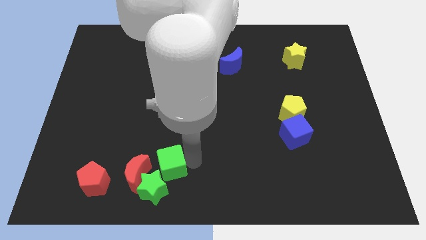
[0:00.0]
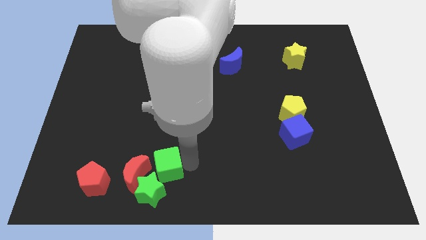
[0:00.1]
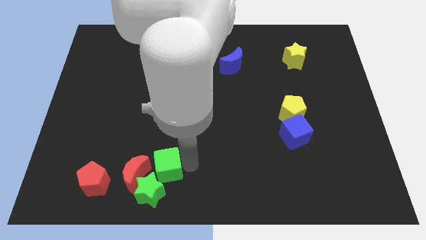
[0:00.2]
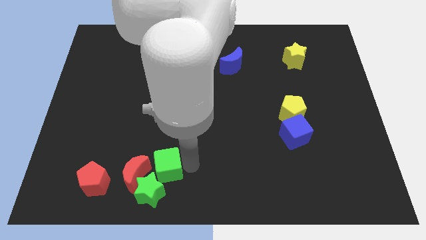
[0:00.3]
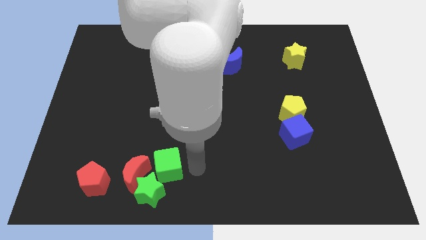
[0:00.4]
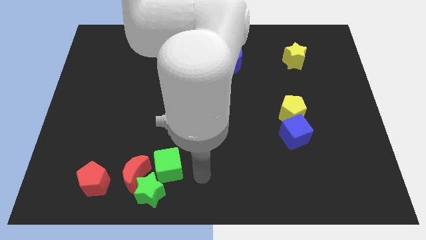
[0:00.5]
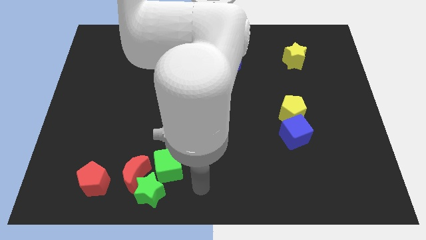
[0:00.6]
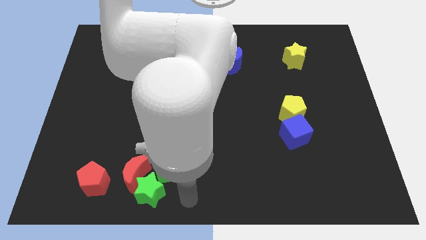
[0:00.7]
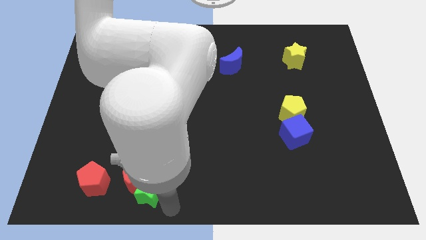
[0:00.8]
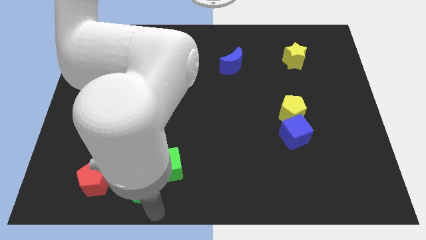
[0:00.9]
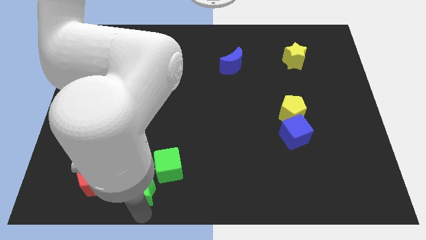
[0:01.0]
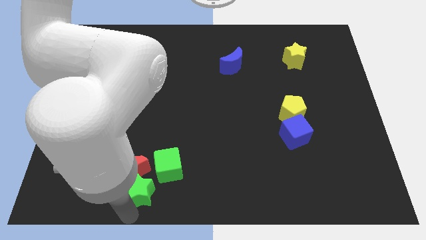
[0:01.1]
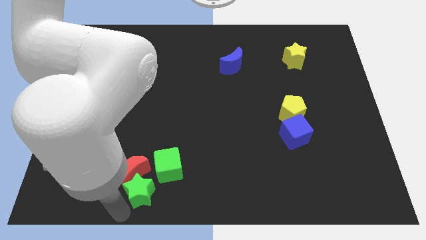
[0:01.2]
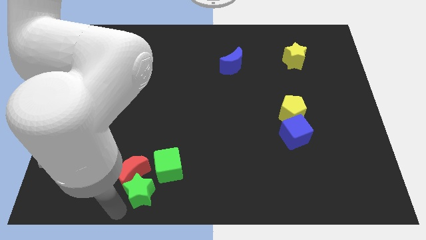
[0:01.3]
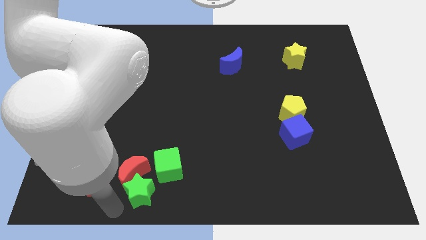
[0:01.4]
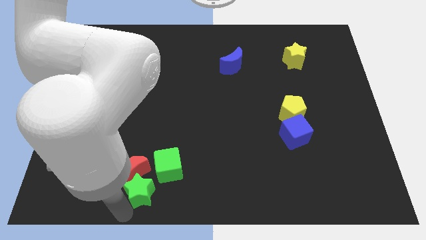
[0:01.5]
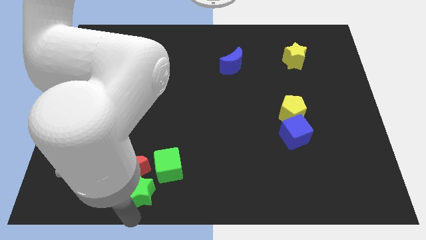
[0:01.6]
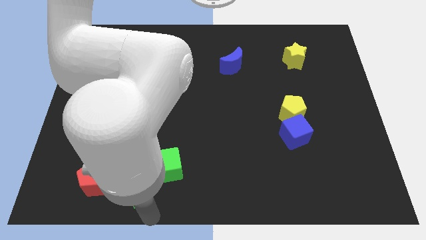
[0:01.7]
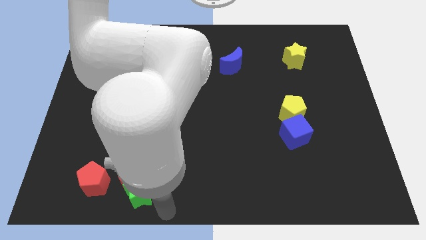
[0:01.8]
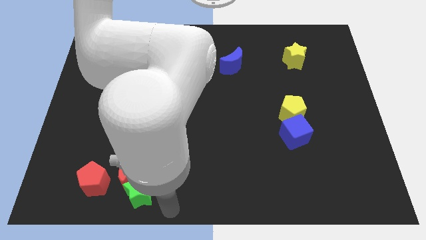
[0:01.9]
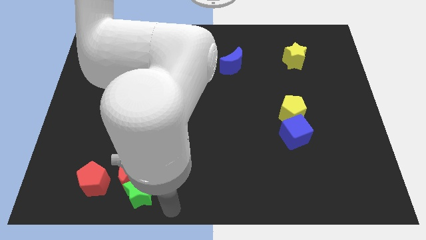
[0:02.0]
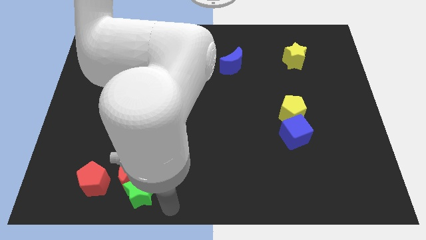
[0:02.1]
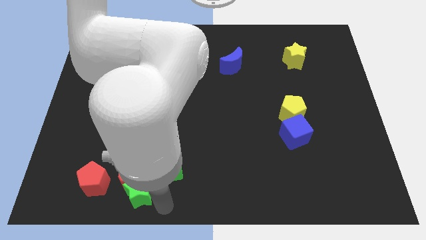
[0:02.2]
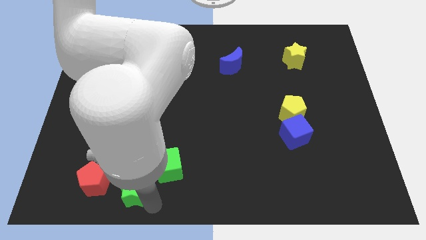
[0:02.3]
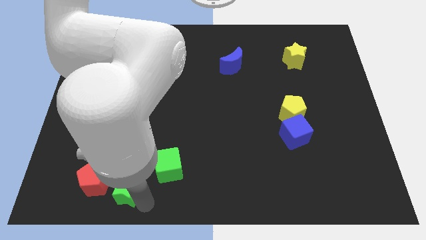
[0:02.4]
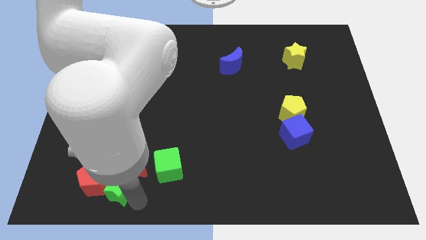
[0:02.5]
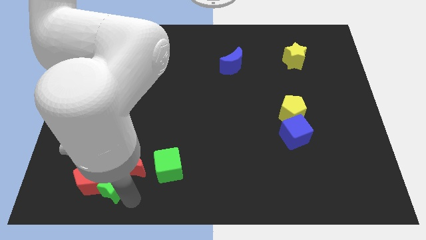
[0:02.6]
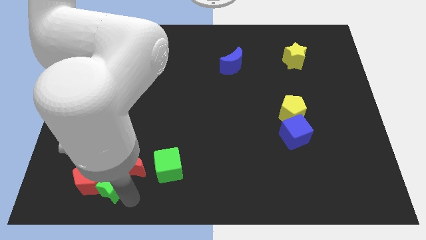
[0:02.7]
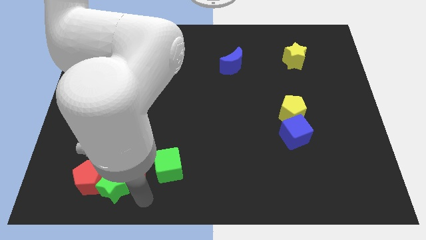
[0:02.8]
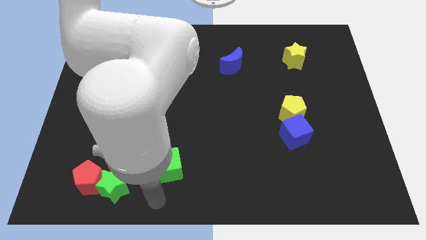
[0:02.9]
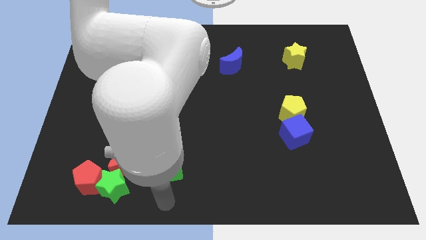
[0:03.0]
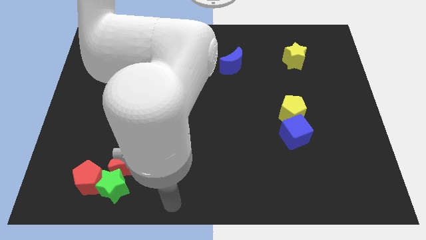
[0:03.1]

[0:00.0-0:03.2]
push the green star parallel right to the red pentagon

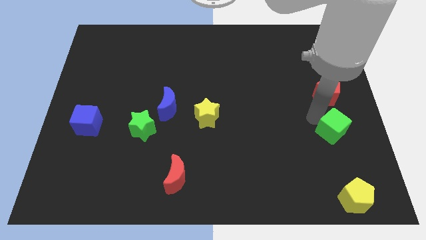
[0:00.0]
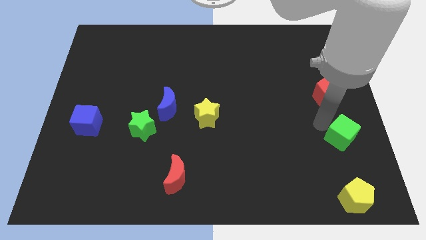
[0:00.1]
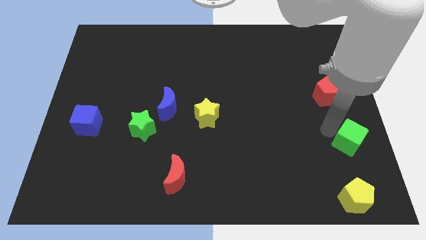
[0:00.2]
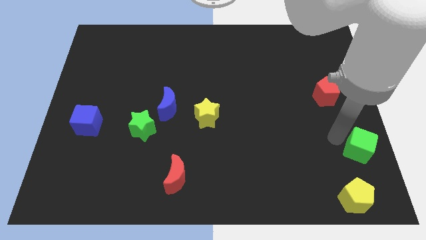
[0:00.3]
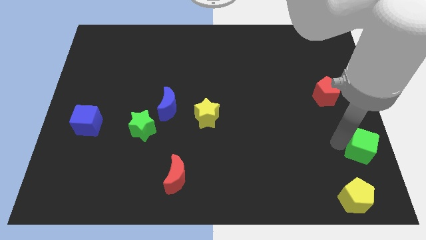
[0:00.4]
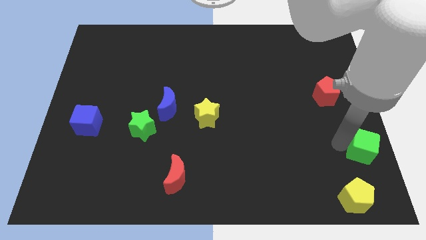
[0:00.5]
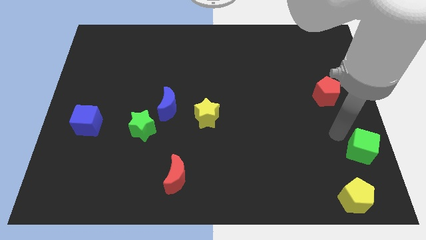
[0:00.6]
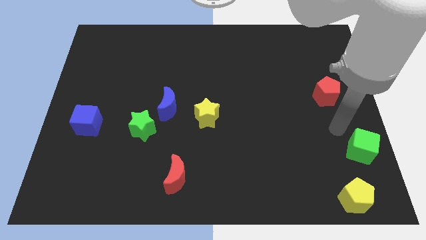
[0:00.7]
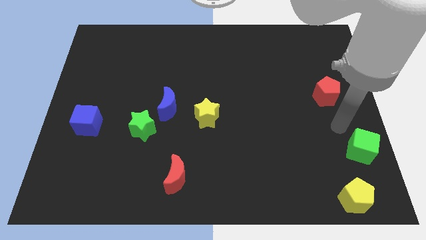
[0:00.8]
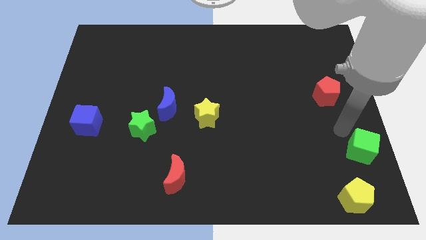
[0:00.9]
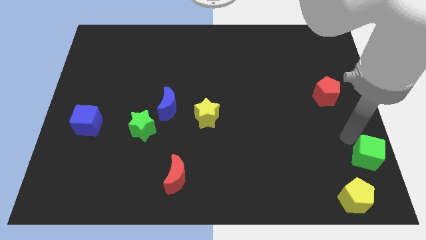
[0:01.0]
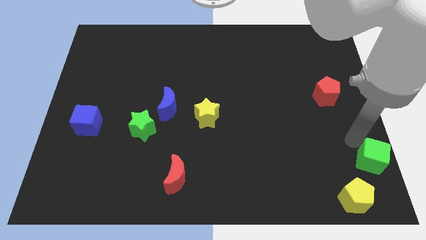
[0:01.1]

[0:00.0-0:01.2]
place the green cube above right to yellow pentagon

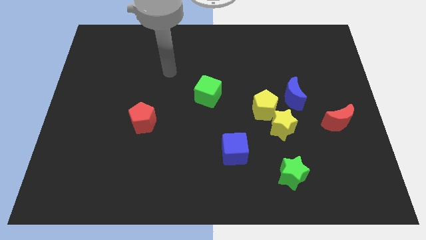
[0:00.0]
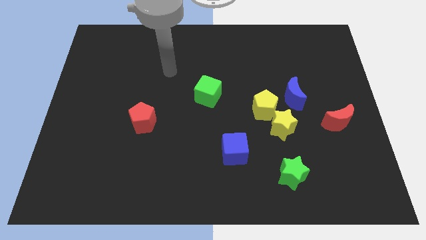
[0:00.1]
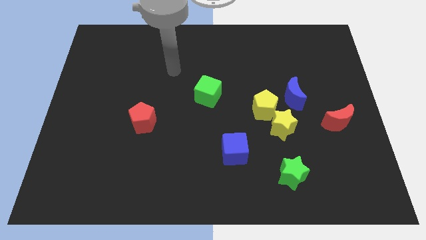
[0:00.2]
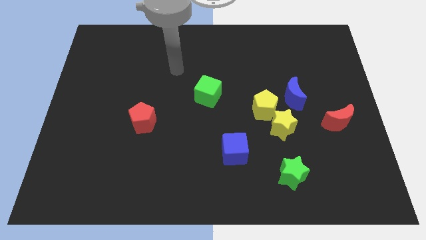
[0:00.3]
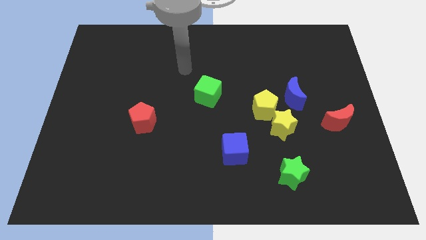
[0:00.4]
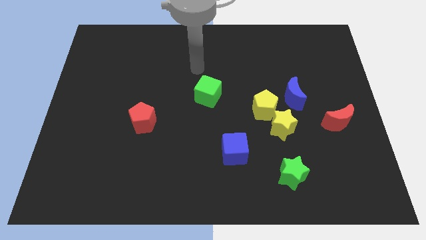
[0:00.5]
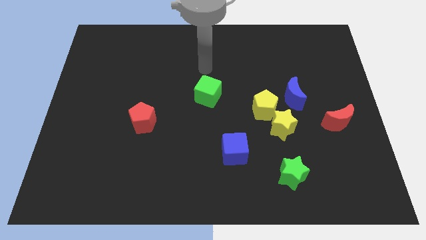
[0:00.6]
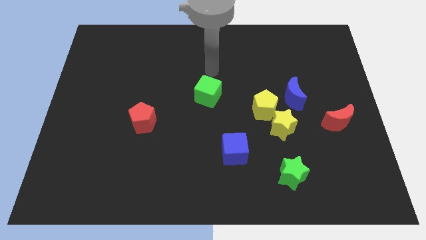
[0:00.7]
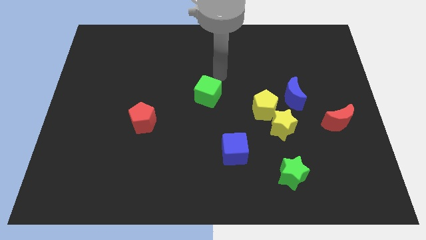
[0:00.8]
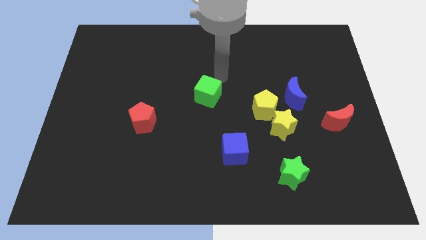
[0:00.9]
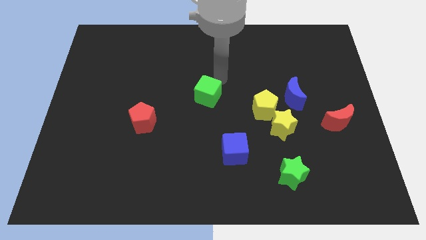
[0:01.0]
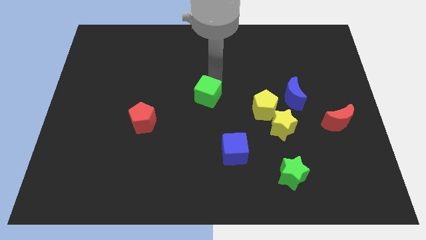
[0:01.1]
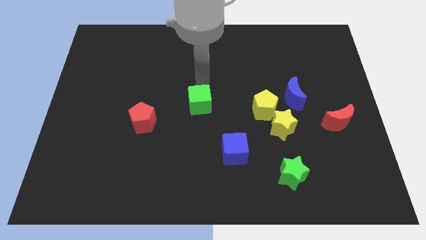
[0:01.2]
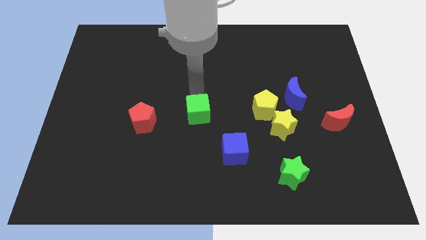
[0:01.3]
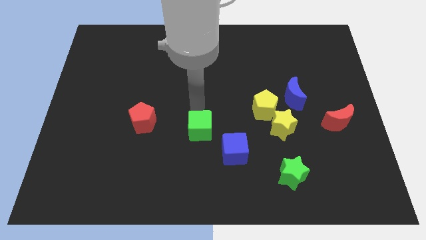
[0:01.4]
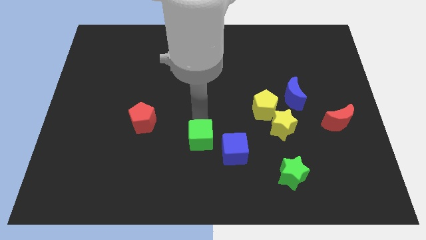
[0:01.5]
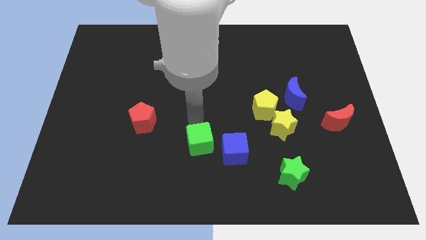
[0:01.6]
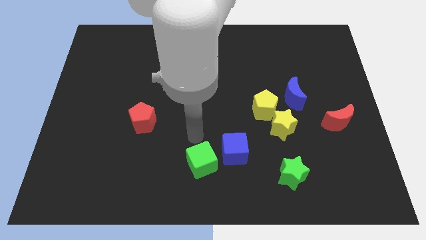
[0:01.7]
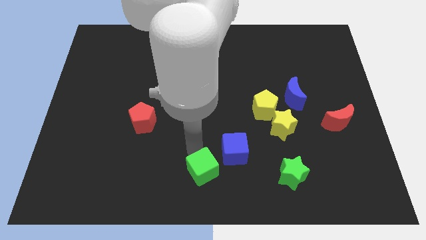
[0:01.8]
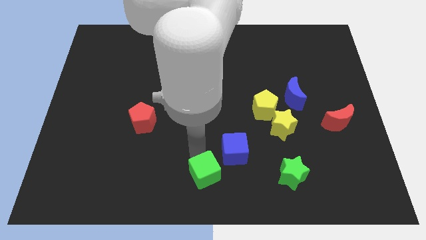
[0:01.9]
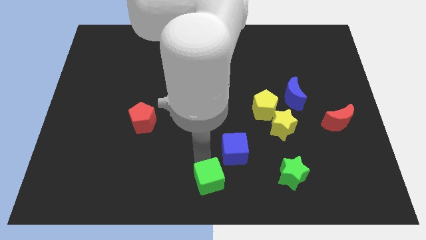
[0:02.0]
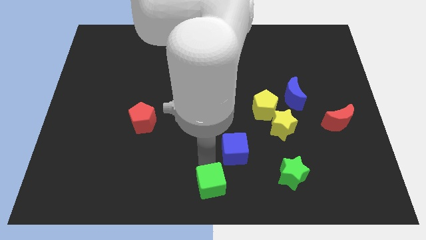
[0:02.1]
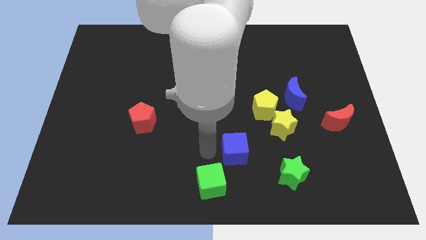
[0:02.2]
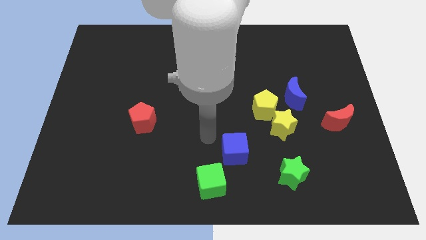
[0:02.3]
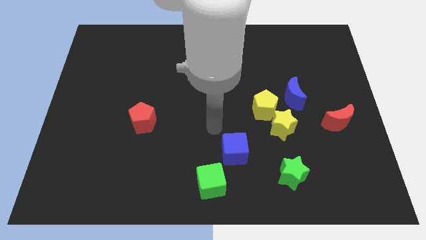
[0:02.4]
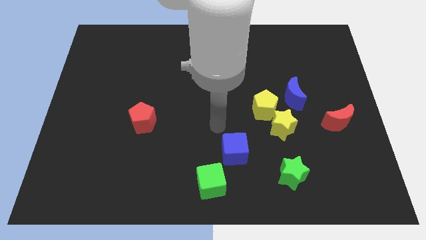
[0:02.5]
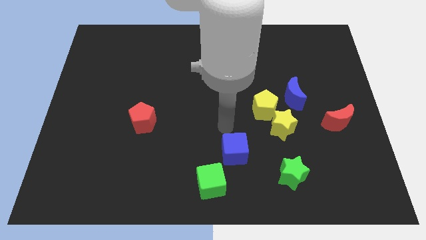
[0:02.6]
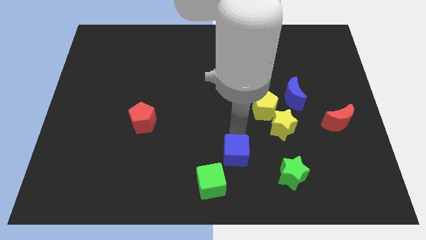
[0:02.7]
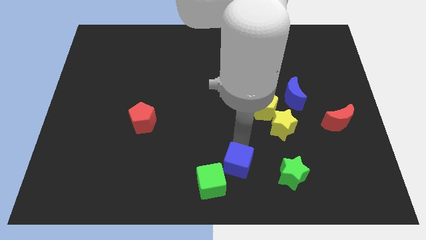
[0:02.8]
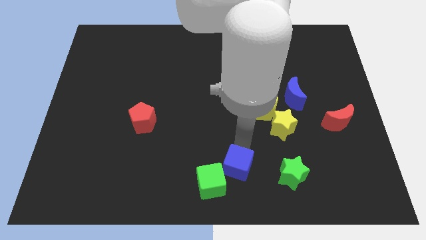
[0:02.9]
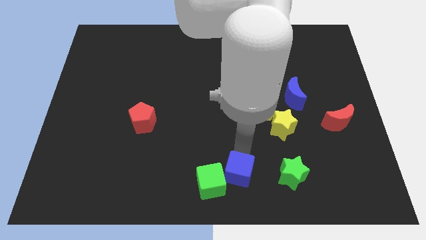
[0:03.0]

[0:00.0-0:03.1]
push the green cube to the bottom center of the board

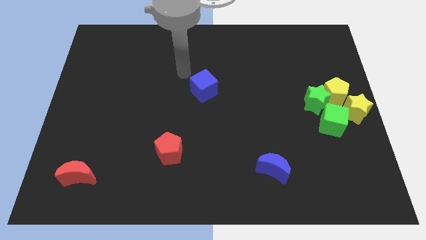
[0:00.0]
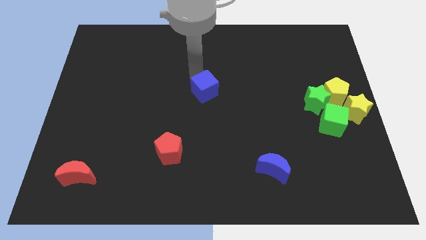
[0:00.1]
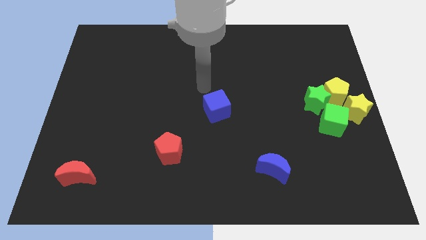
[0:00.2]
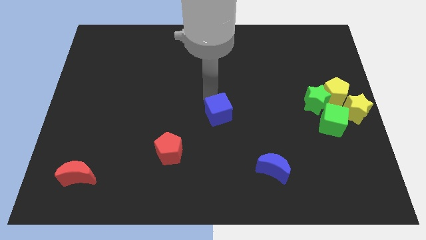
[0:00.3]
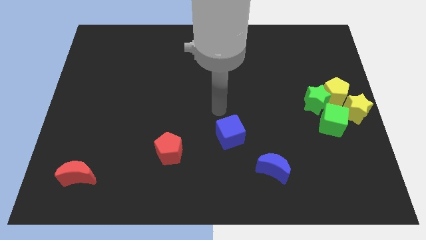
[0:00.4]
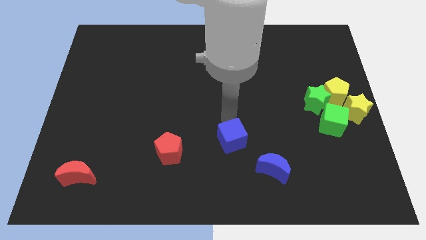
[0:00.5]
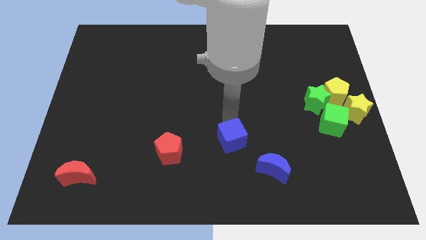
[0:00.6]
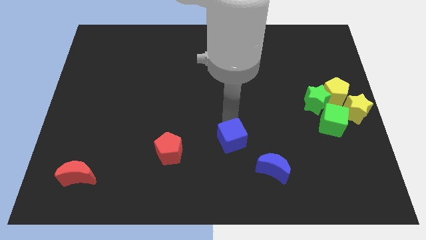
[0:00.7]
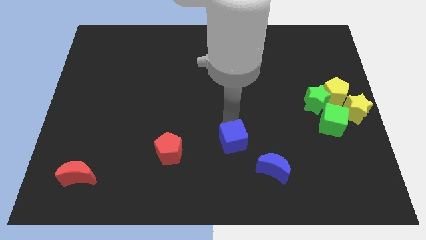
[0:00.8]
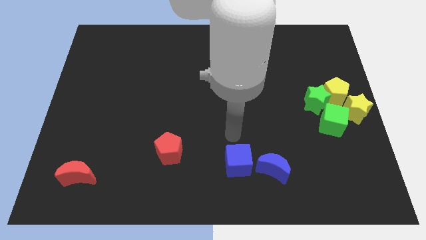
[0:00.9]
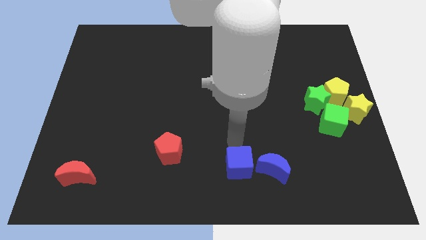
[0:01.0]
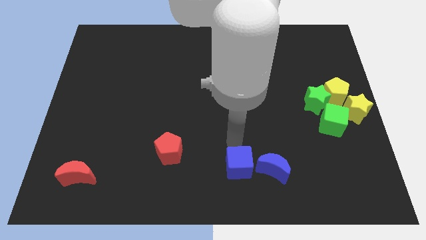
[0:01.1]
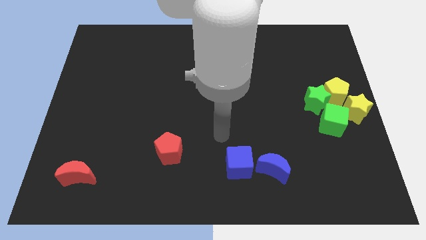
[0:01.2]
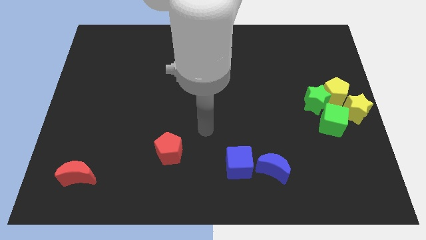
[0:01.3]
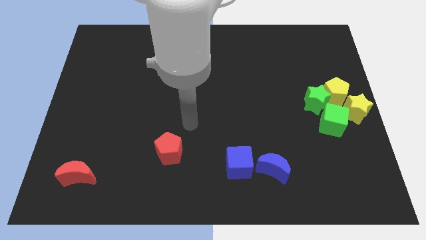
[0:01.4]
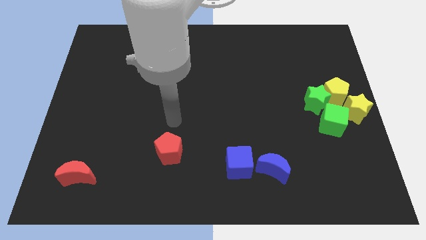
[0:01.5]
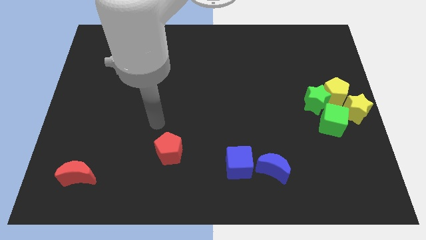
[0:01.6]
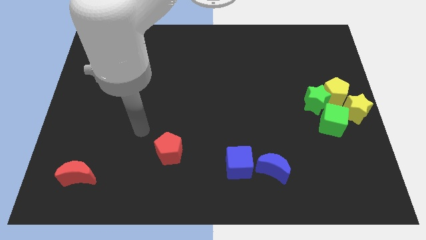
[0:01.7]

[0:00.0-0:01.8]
put blue cube left to the blue moon
